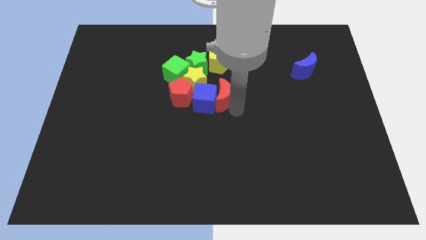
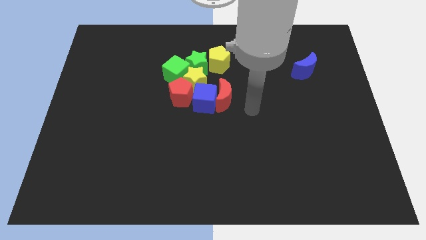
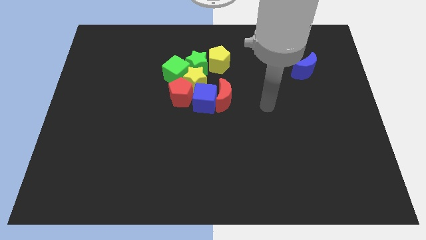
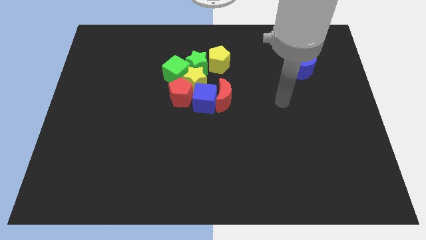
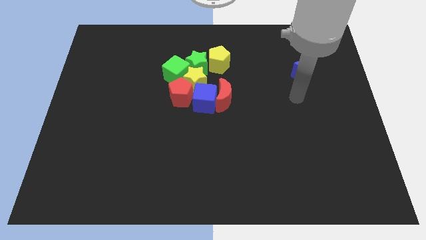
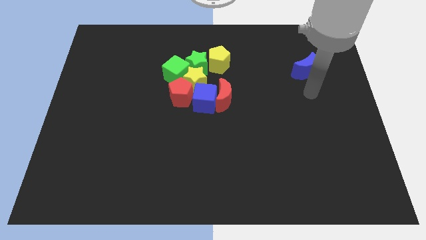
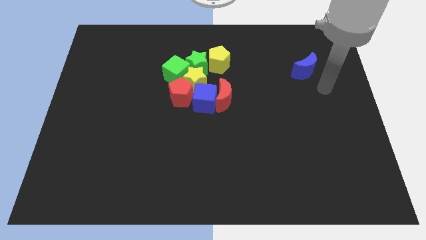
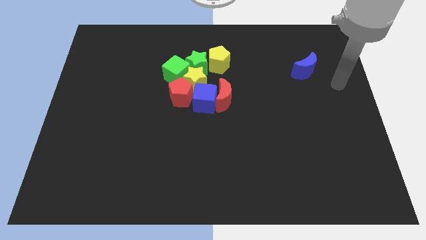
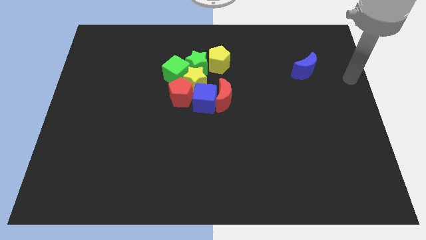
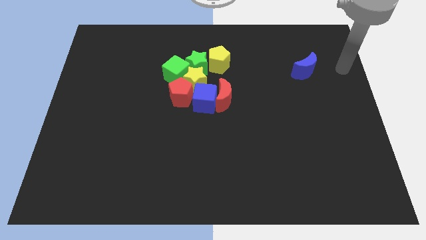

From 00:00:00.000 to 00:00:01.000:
move your arm away from red moon

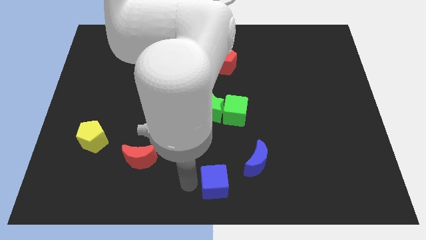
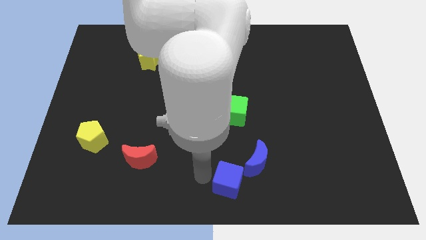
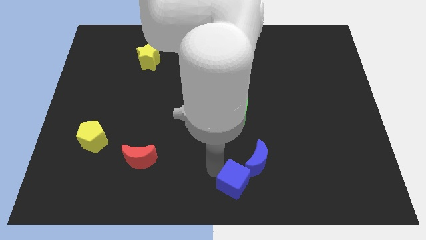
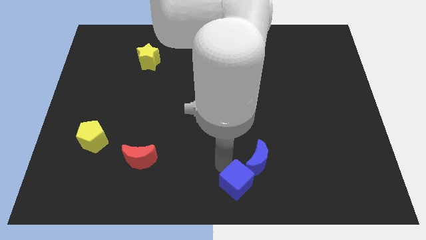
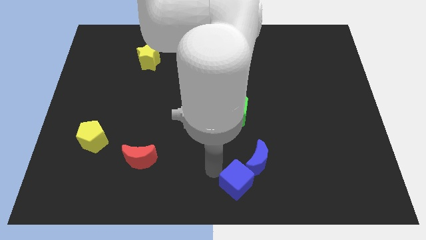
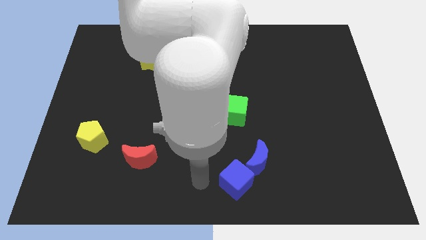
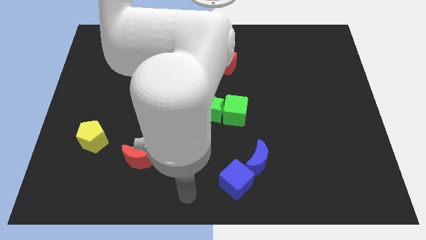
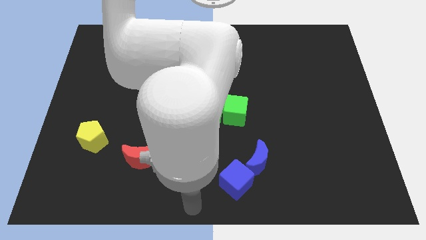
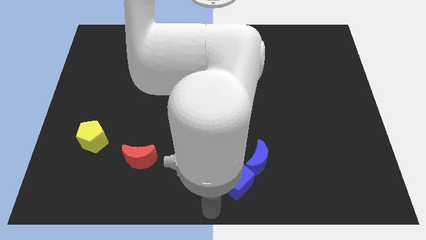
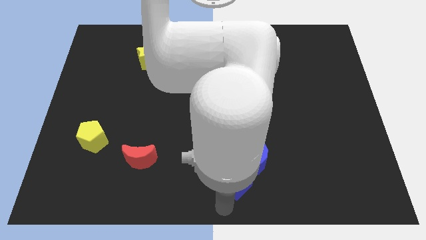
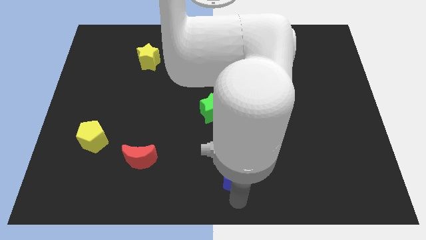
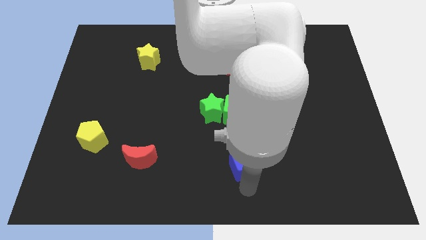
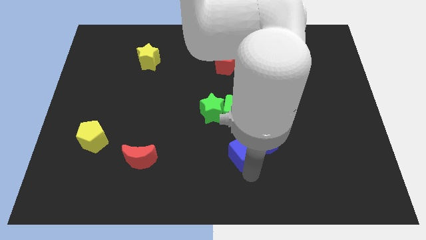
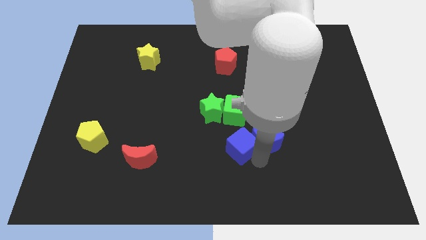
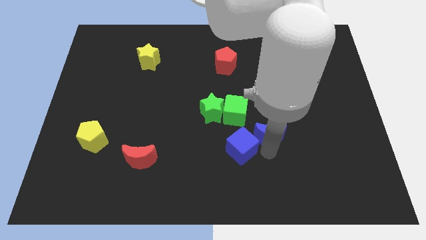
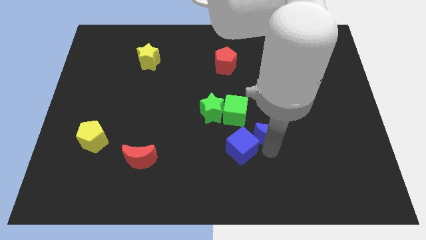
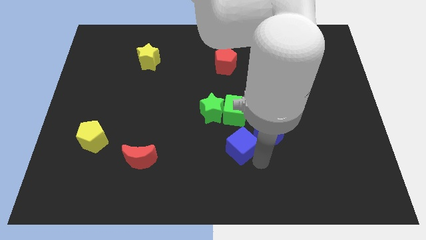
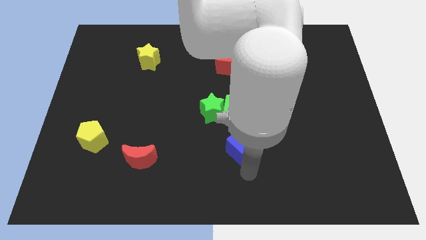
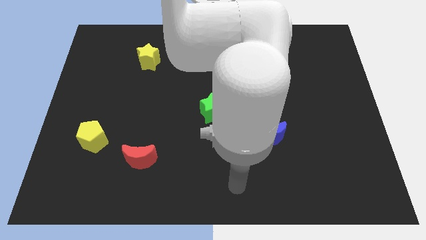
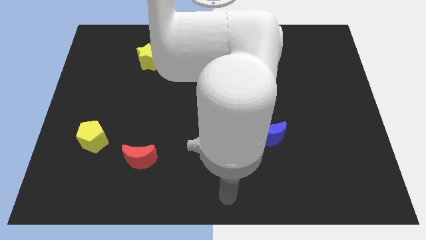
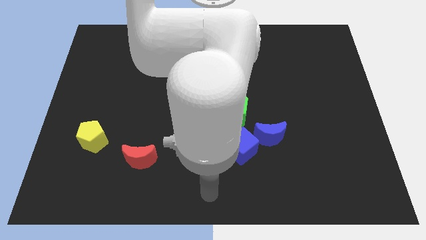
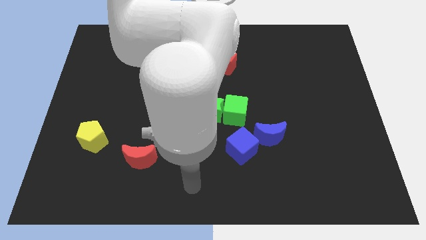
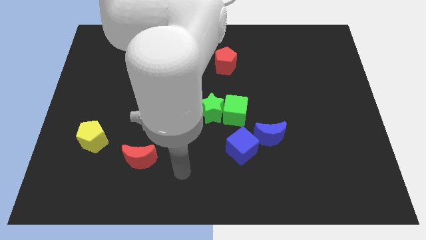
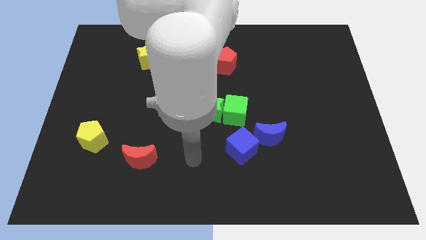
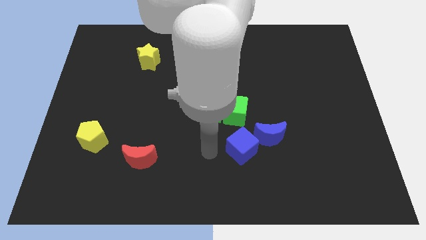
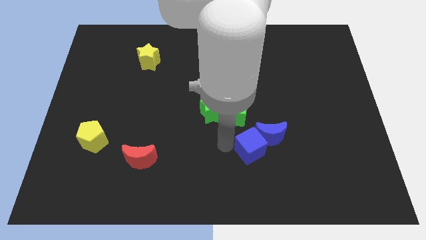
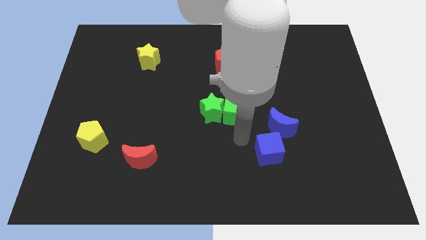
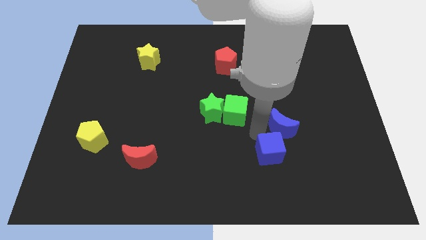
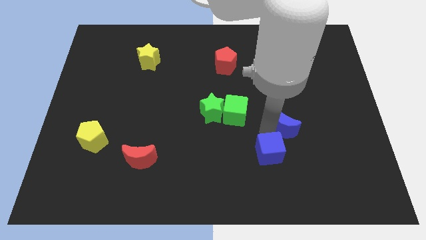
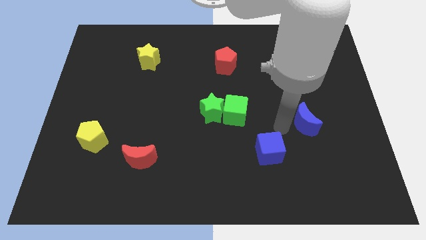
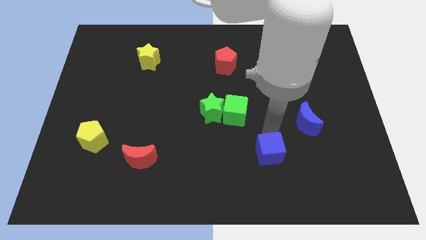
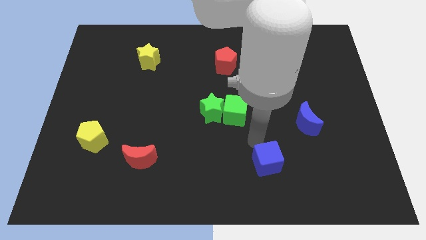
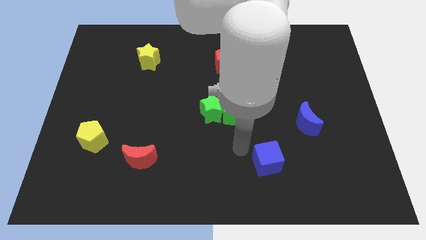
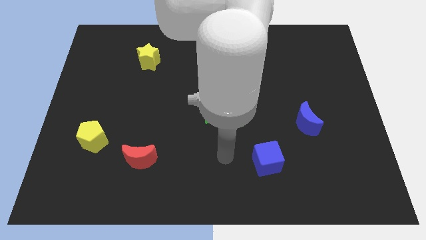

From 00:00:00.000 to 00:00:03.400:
place the blue cube diagonally to the left of blue moon

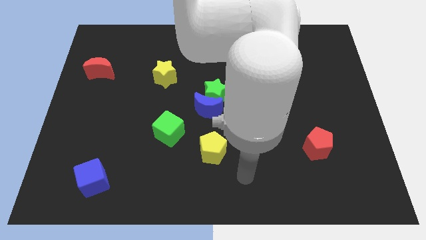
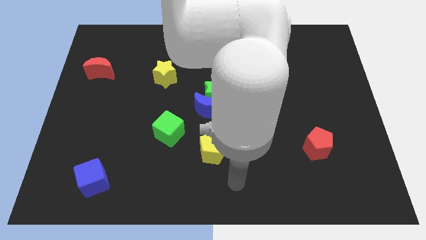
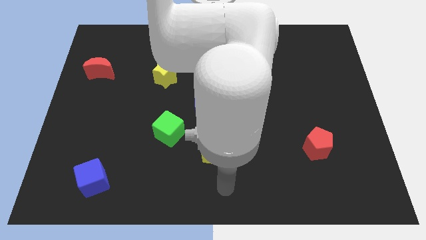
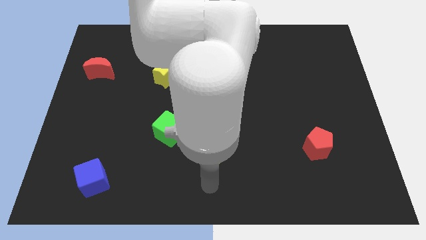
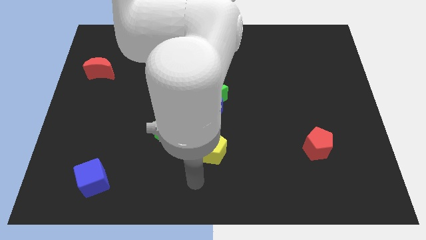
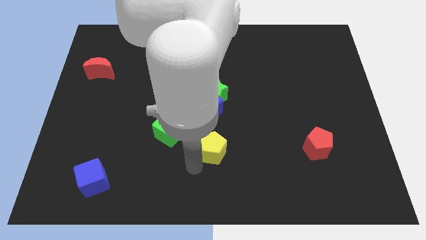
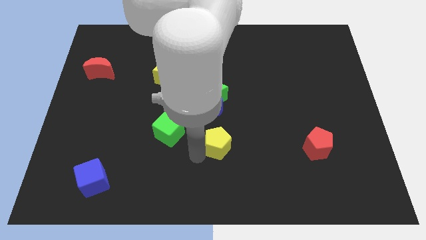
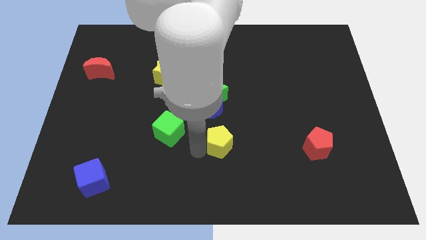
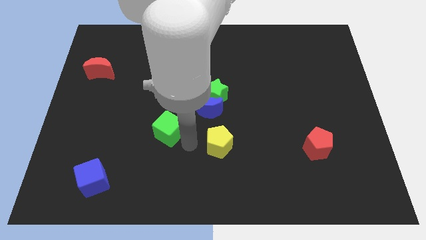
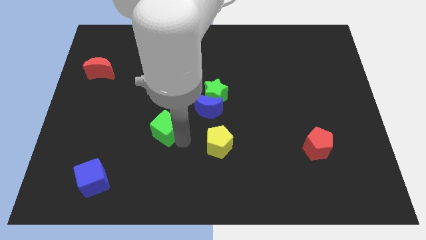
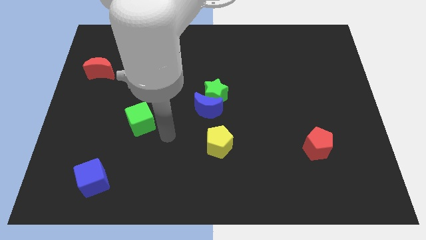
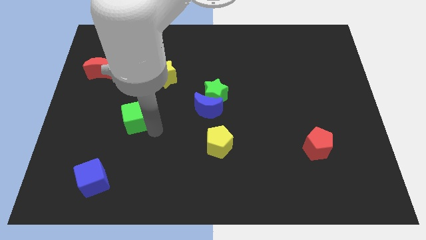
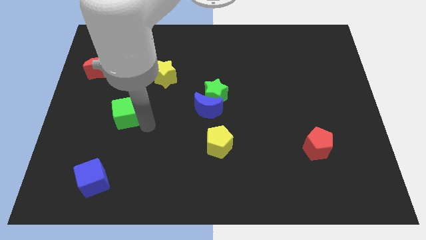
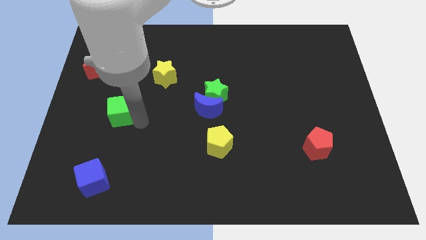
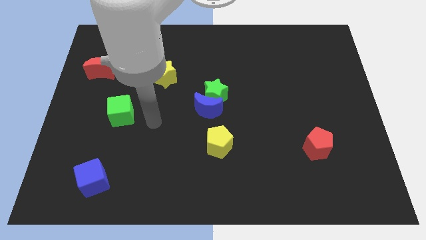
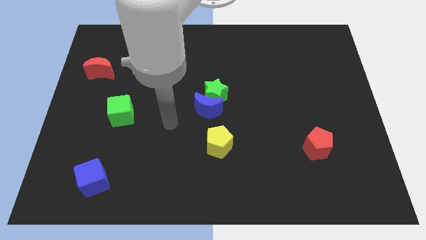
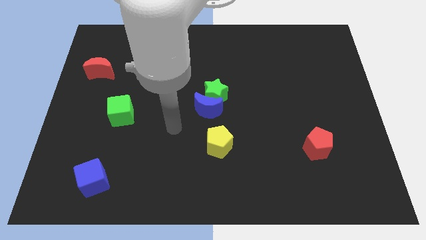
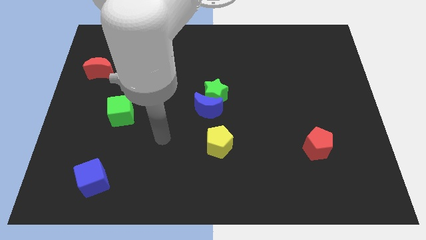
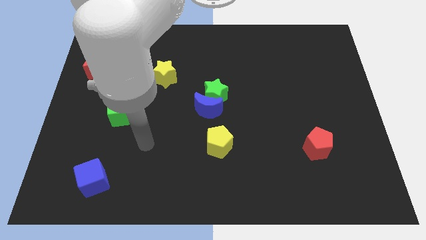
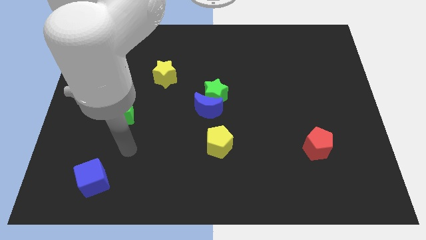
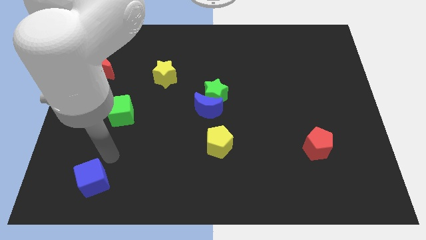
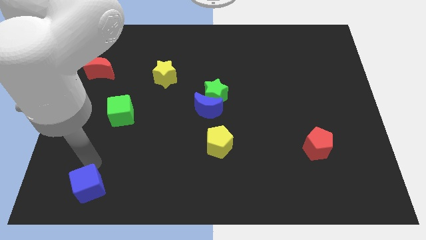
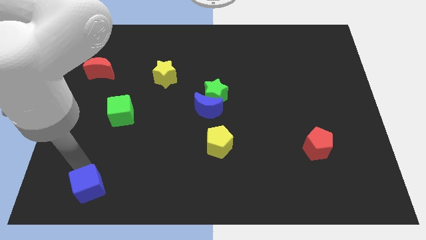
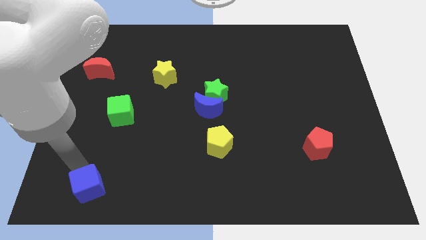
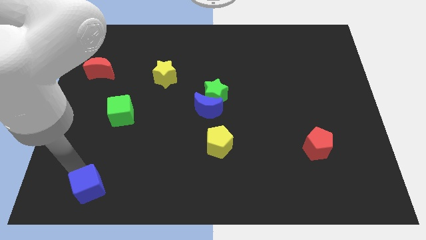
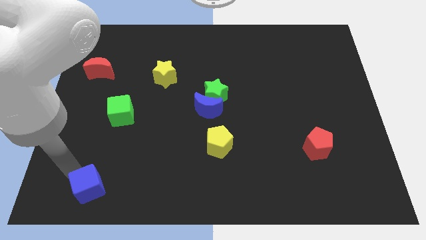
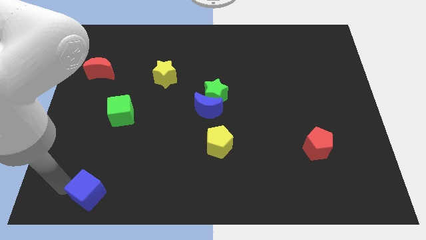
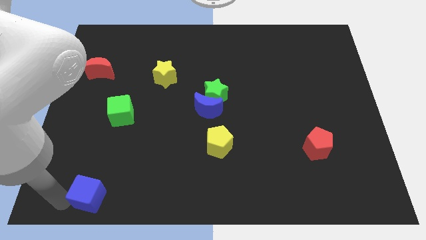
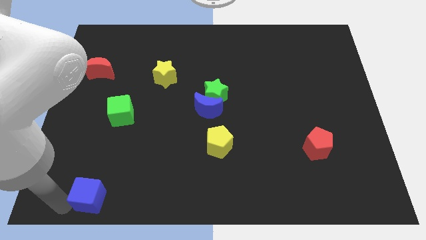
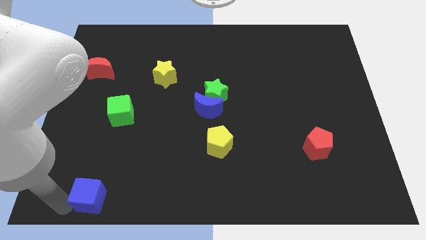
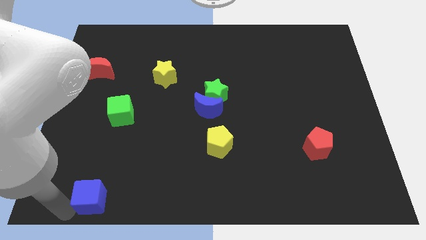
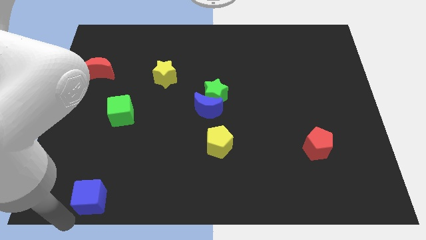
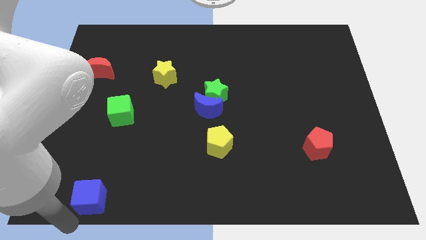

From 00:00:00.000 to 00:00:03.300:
separate the yellow pentagon green cube and blue cube

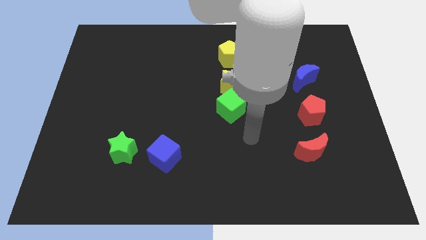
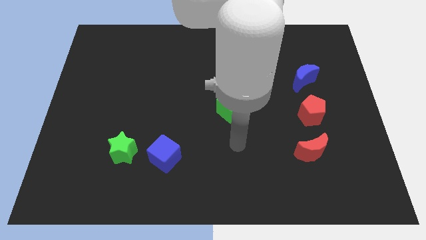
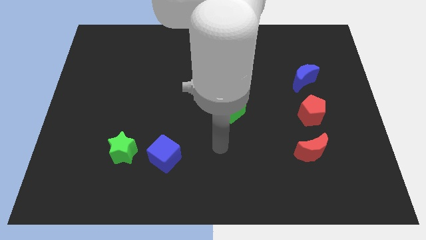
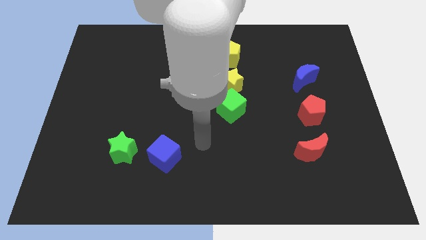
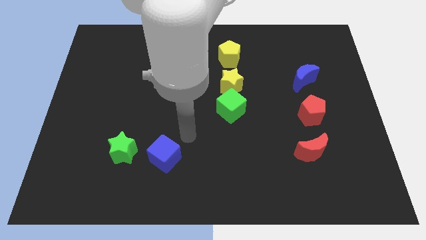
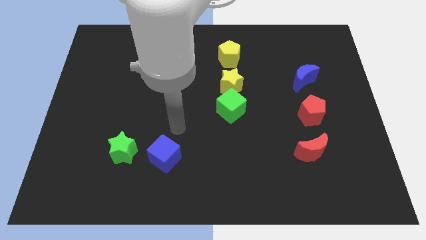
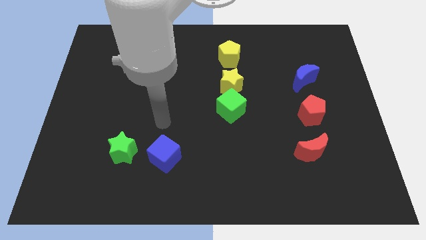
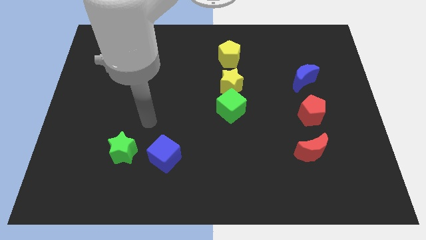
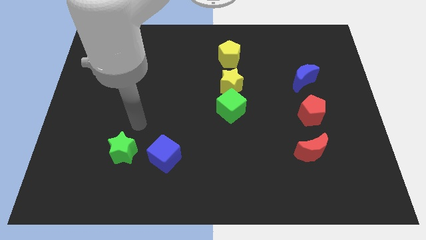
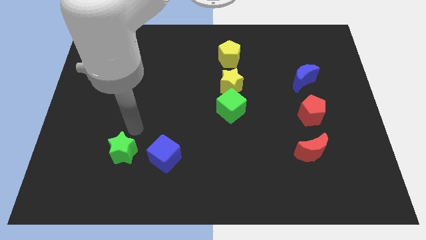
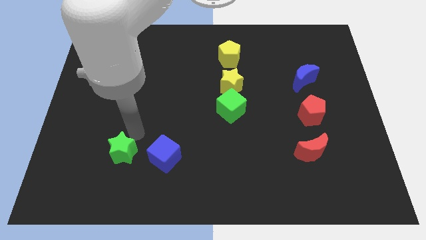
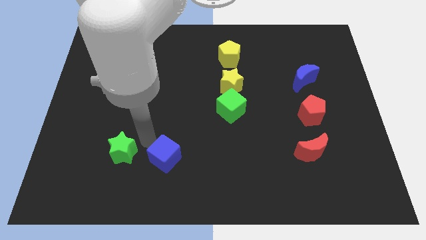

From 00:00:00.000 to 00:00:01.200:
move the arm to the top left side of the blue cube
